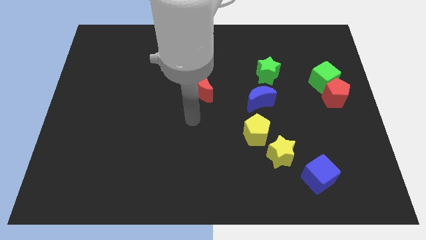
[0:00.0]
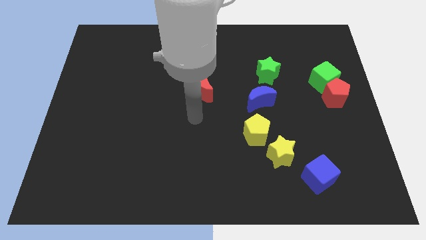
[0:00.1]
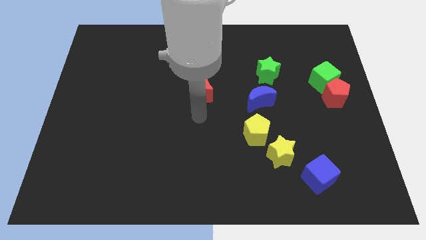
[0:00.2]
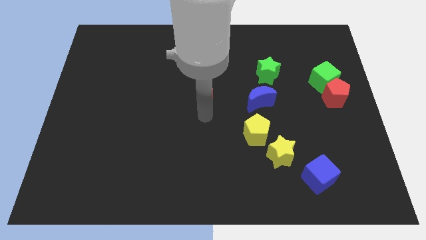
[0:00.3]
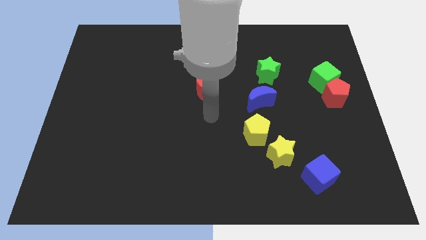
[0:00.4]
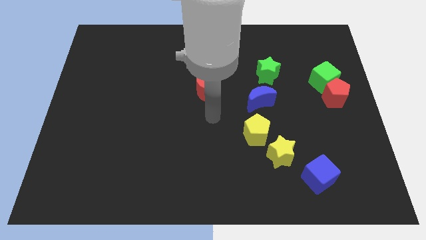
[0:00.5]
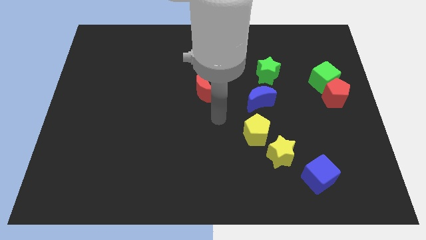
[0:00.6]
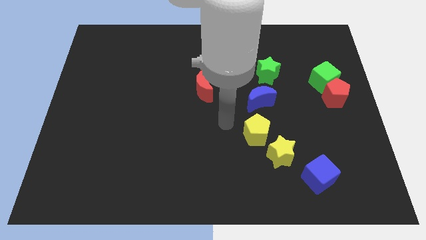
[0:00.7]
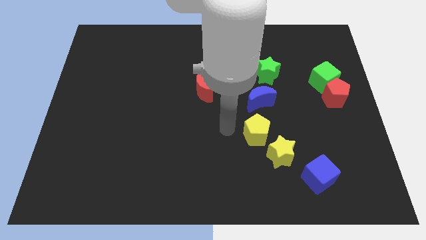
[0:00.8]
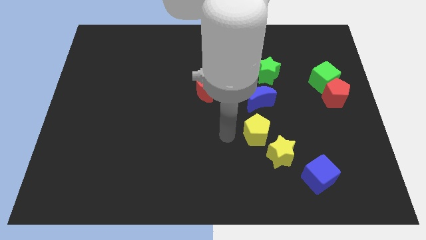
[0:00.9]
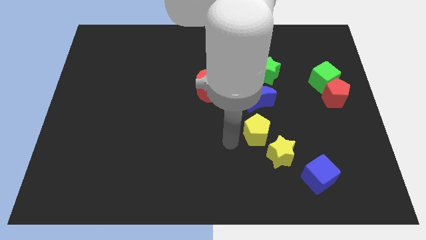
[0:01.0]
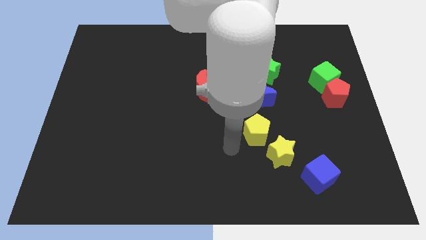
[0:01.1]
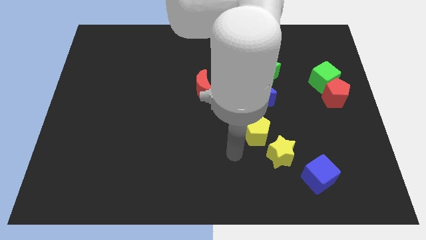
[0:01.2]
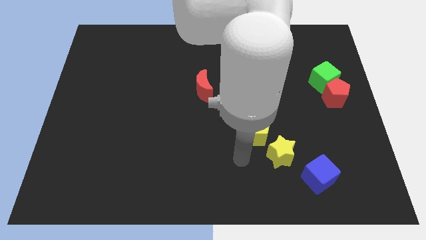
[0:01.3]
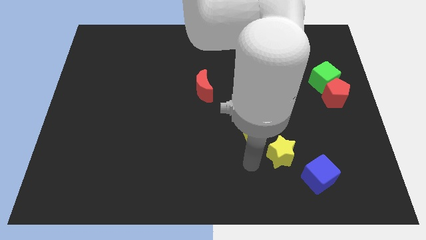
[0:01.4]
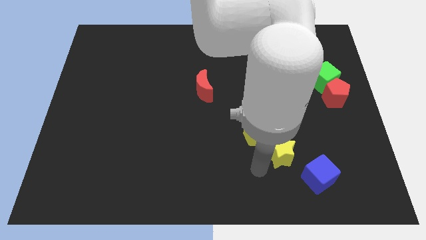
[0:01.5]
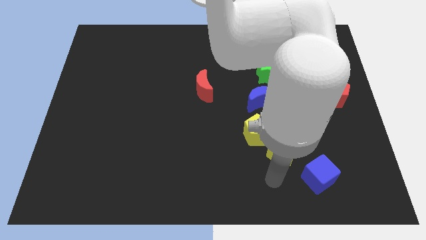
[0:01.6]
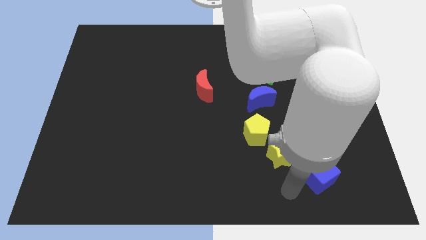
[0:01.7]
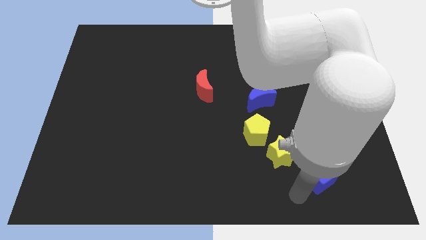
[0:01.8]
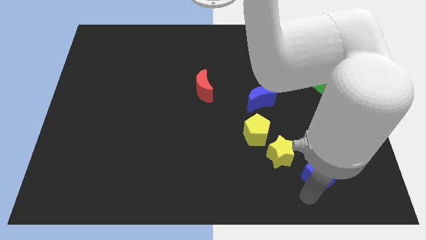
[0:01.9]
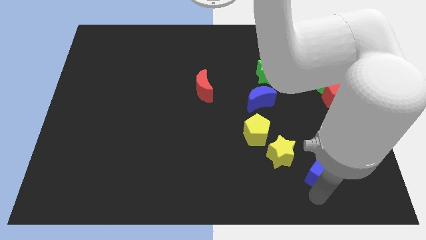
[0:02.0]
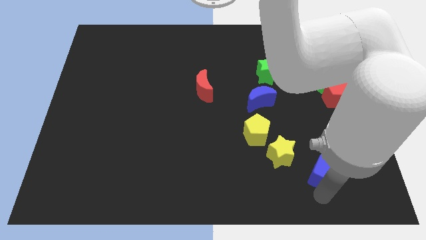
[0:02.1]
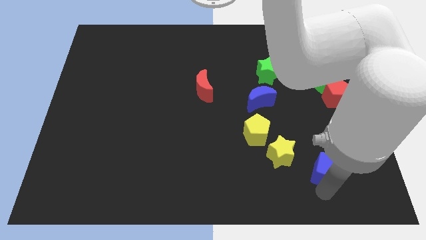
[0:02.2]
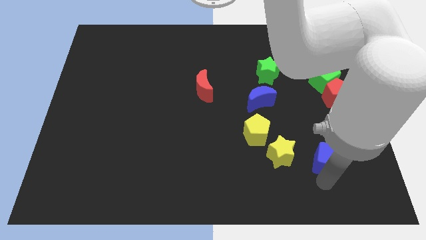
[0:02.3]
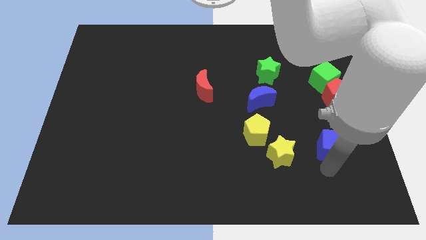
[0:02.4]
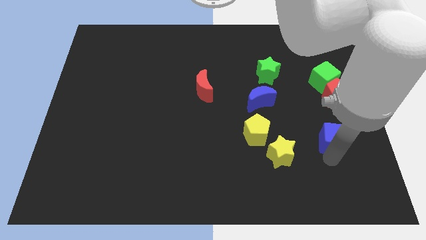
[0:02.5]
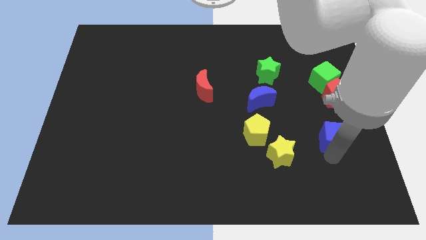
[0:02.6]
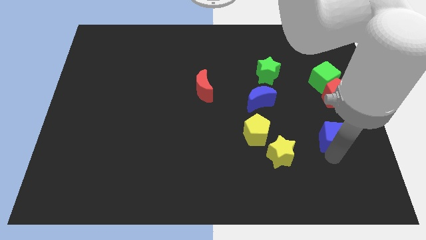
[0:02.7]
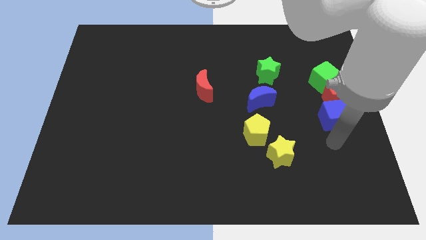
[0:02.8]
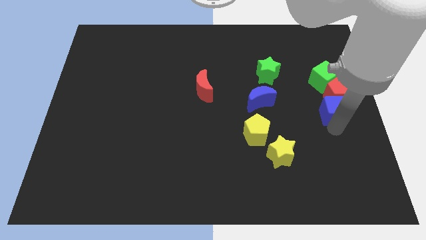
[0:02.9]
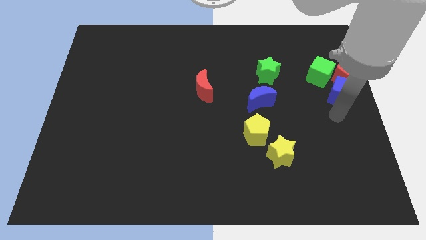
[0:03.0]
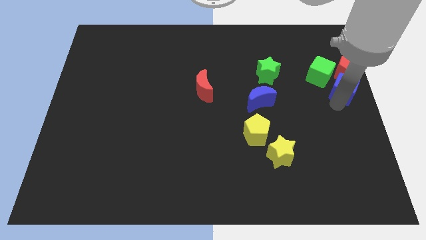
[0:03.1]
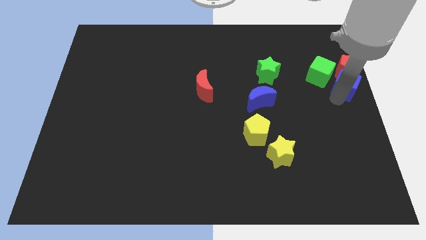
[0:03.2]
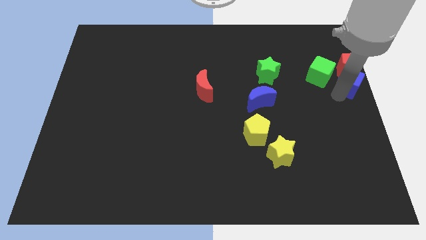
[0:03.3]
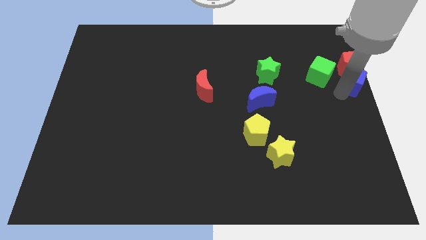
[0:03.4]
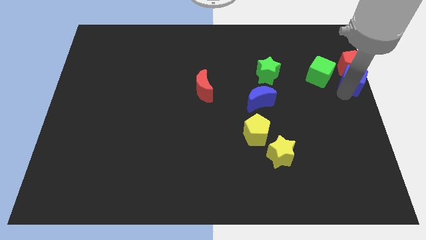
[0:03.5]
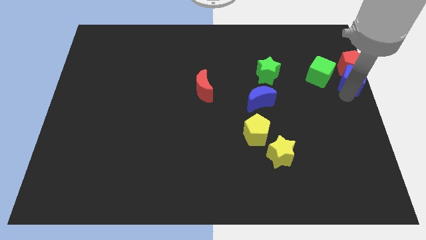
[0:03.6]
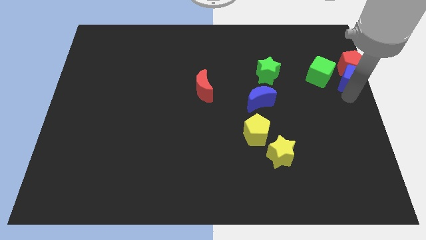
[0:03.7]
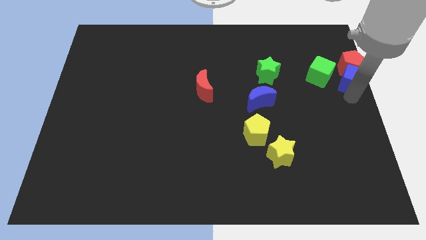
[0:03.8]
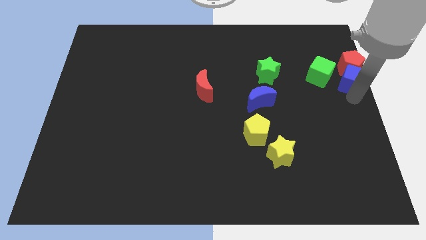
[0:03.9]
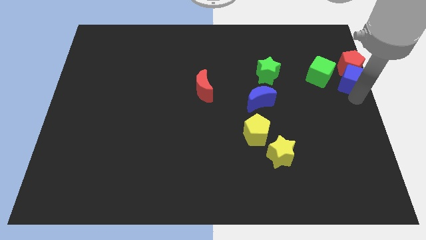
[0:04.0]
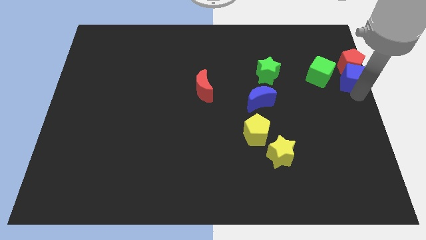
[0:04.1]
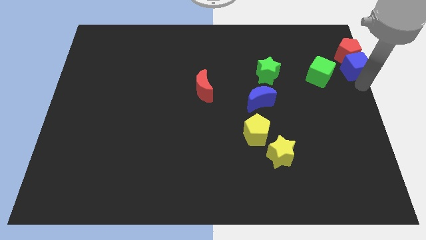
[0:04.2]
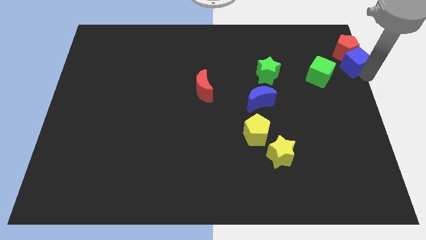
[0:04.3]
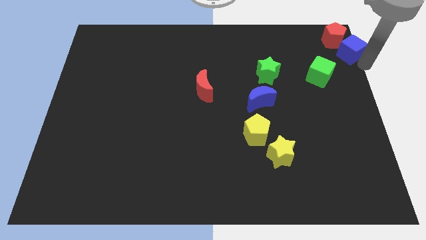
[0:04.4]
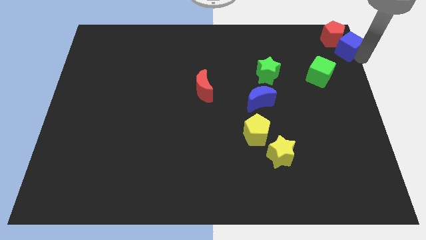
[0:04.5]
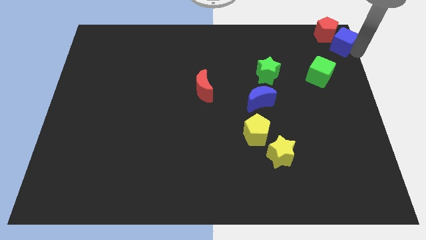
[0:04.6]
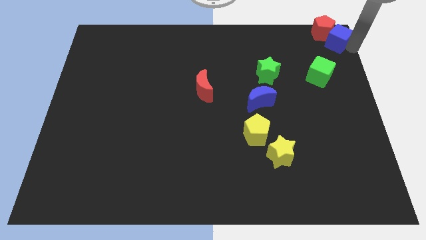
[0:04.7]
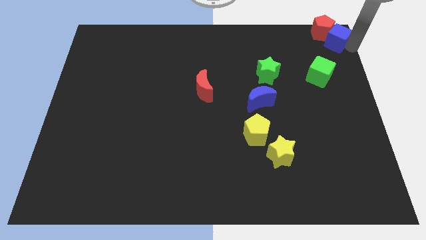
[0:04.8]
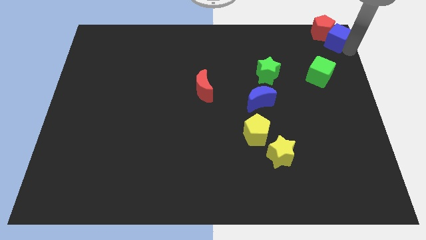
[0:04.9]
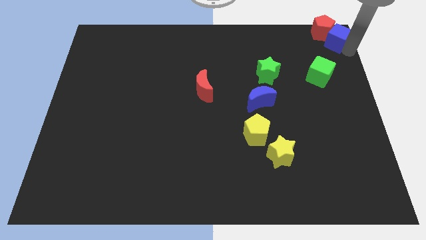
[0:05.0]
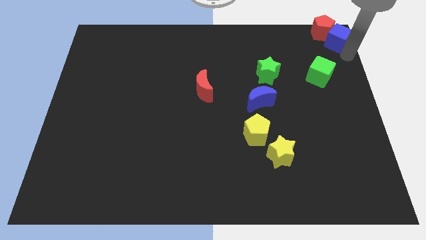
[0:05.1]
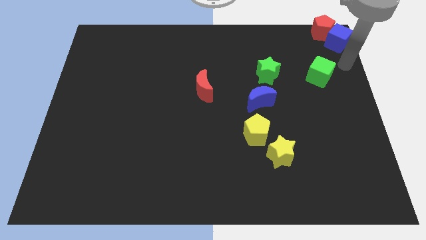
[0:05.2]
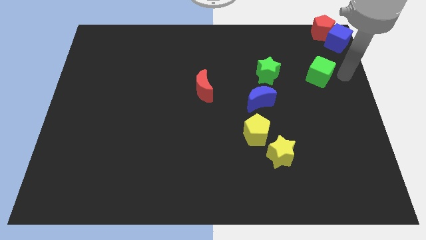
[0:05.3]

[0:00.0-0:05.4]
place the blue cube and red pentagon above the green cube

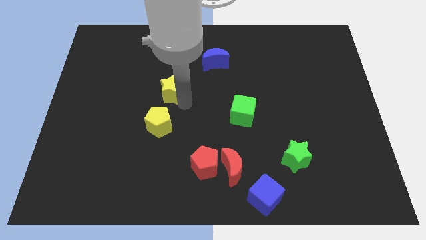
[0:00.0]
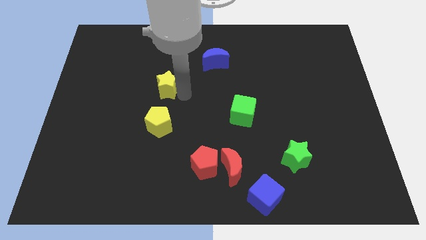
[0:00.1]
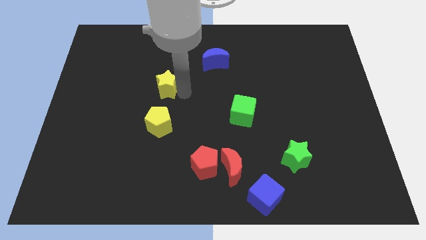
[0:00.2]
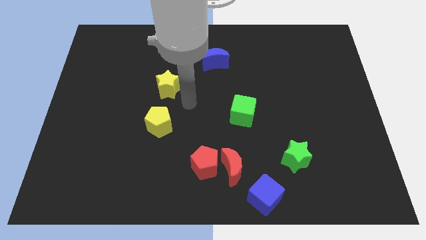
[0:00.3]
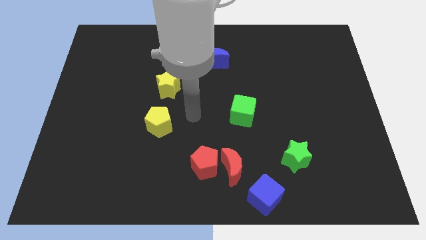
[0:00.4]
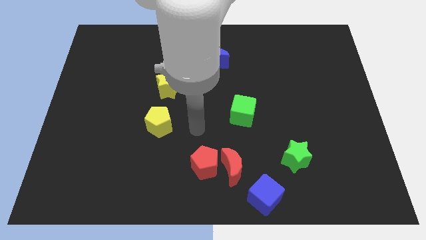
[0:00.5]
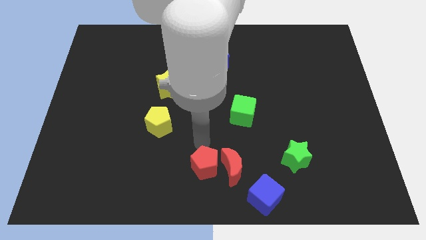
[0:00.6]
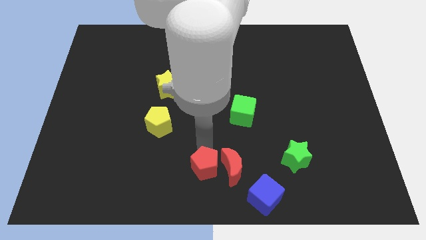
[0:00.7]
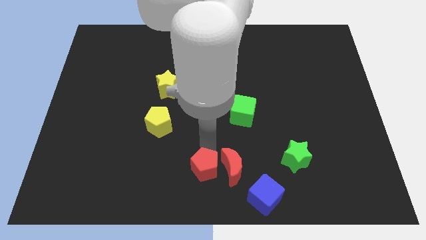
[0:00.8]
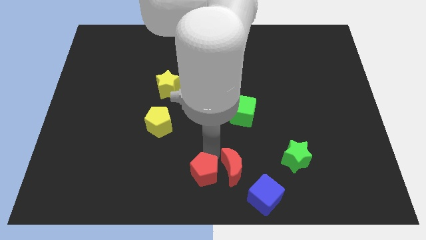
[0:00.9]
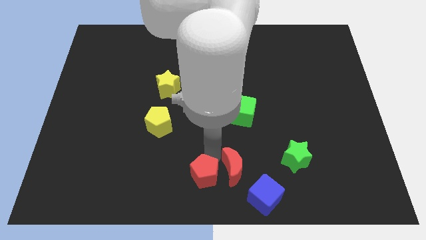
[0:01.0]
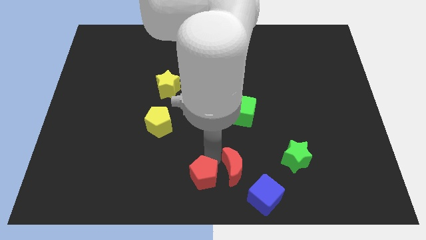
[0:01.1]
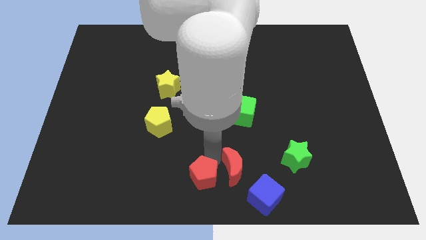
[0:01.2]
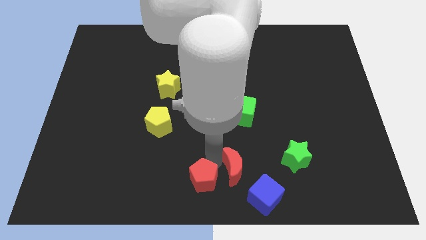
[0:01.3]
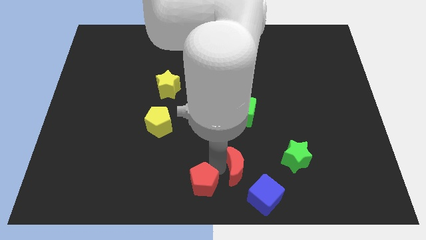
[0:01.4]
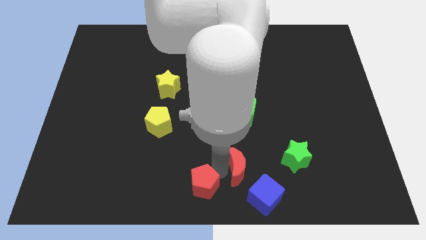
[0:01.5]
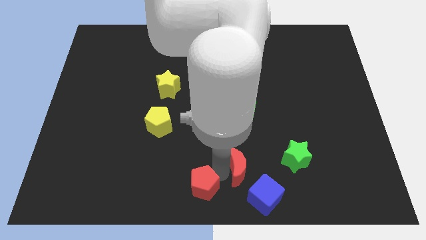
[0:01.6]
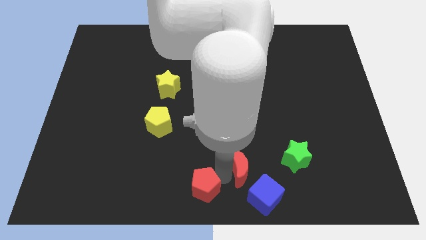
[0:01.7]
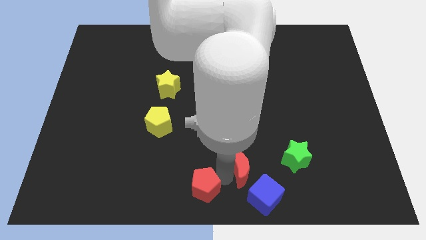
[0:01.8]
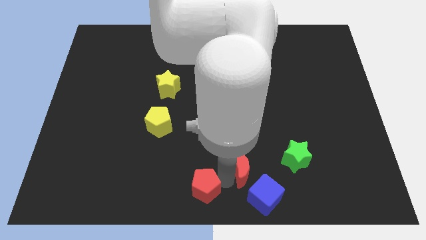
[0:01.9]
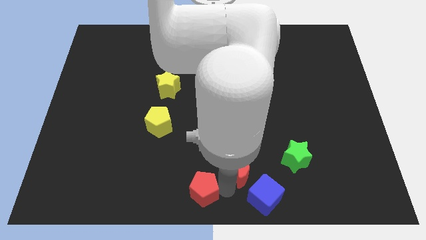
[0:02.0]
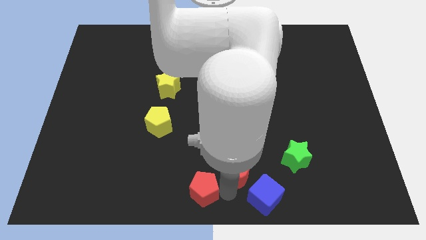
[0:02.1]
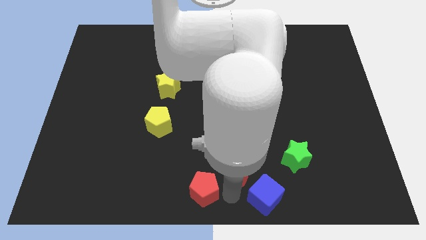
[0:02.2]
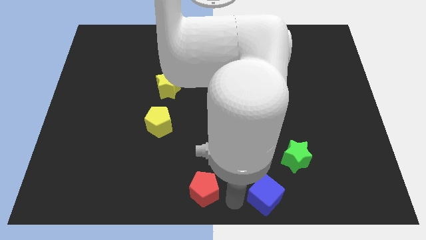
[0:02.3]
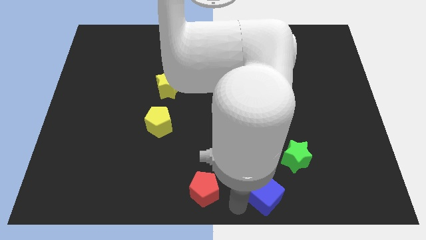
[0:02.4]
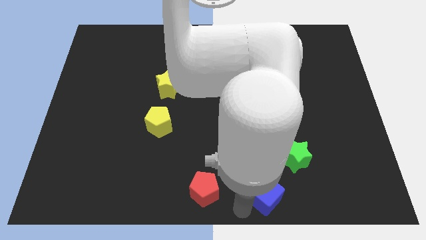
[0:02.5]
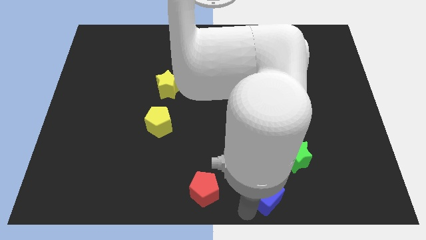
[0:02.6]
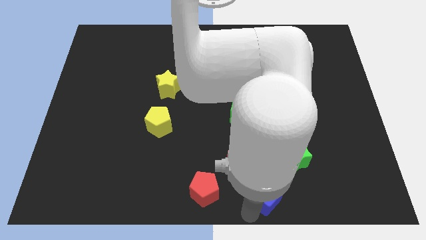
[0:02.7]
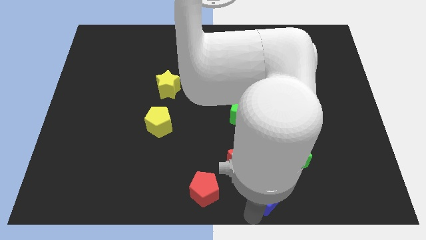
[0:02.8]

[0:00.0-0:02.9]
place red pentagon to the bottom center of the board

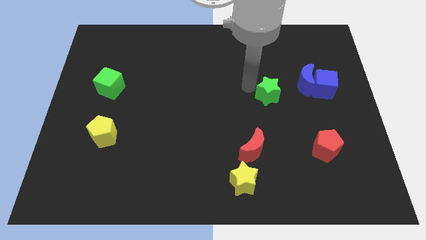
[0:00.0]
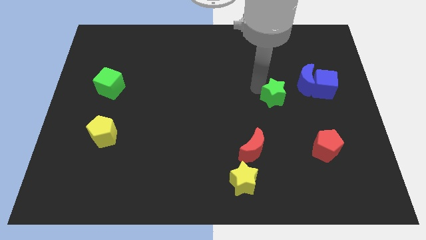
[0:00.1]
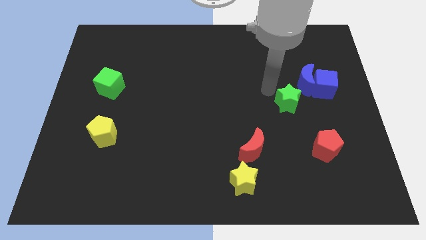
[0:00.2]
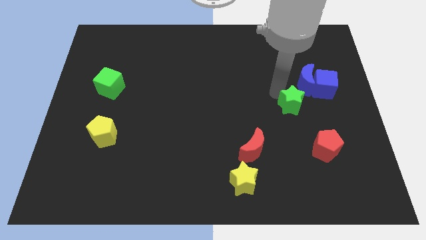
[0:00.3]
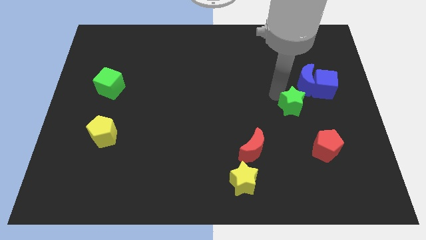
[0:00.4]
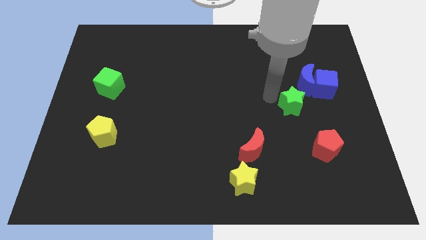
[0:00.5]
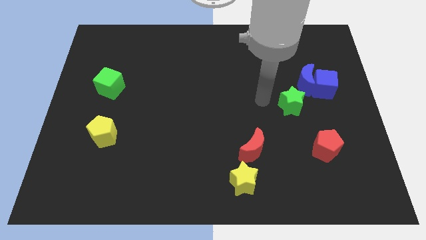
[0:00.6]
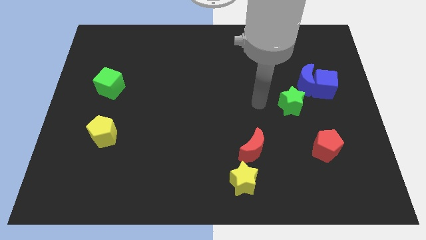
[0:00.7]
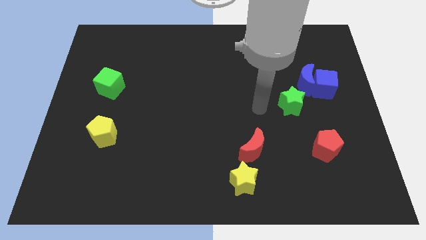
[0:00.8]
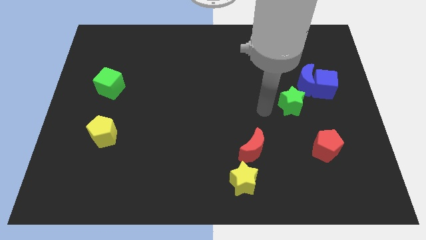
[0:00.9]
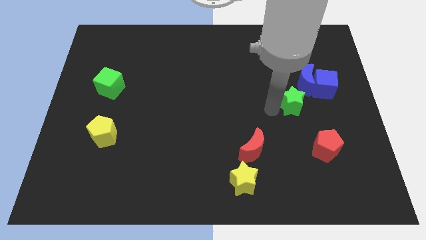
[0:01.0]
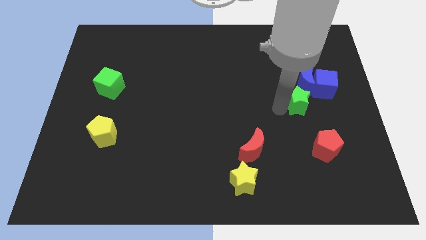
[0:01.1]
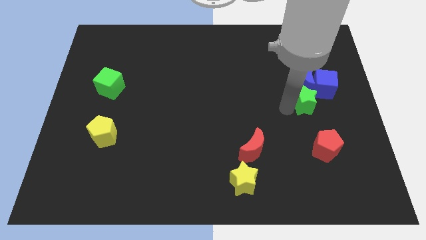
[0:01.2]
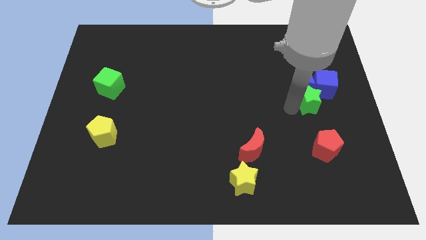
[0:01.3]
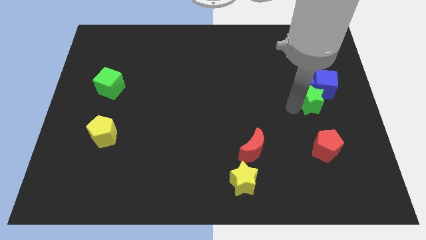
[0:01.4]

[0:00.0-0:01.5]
place the green star below the blue crescent
